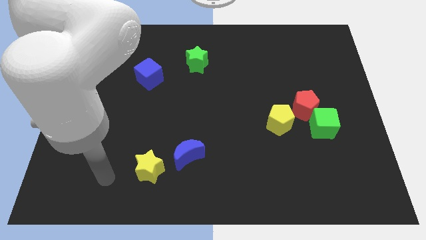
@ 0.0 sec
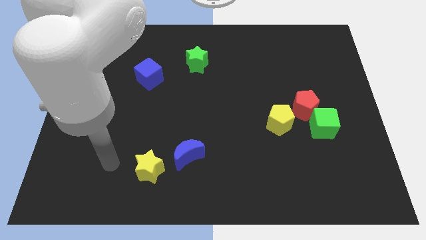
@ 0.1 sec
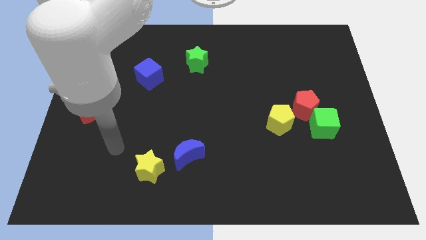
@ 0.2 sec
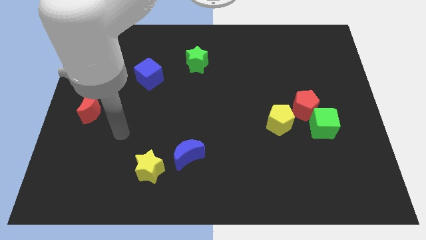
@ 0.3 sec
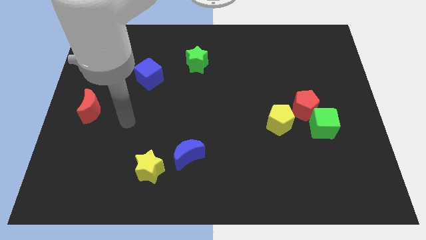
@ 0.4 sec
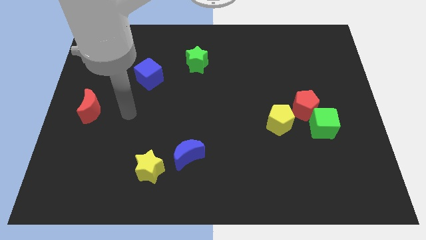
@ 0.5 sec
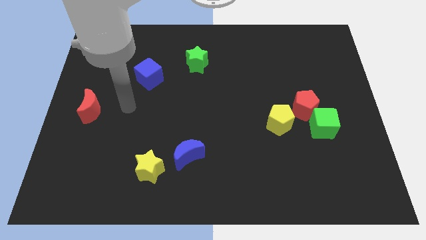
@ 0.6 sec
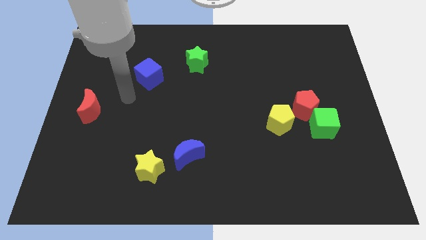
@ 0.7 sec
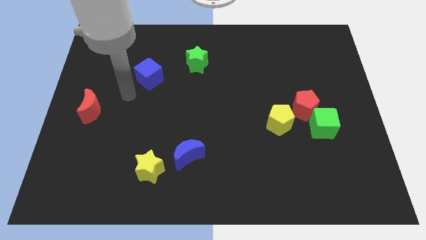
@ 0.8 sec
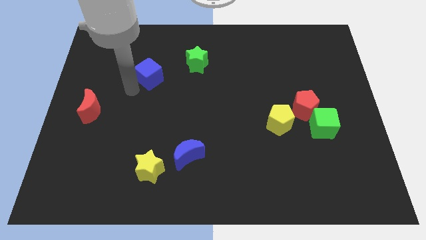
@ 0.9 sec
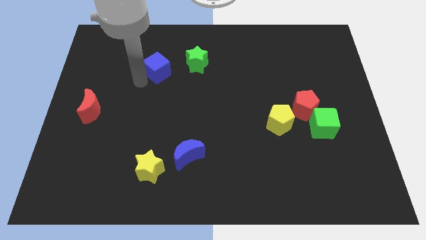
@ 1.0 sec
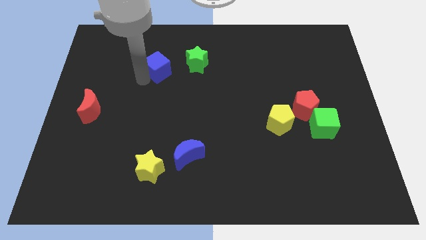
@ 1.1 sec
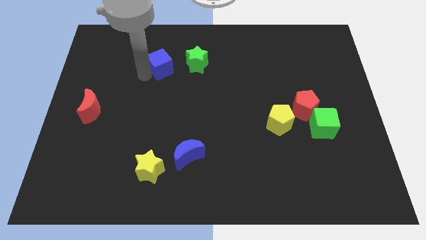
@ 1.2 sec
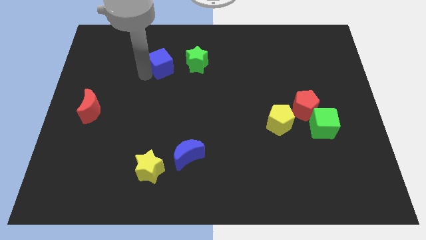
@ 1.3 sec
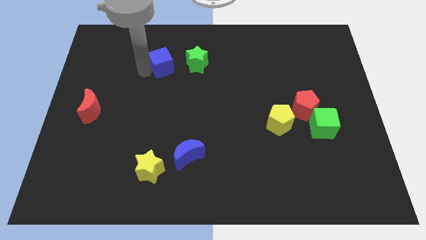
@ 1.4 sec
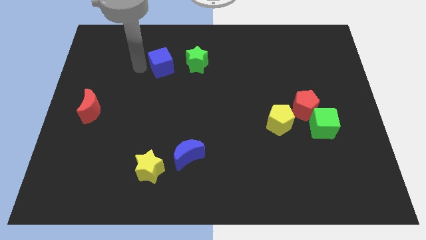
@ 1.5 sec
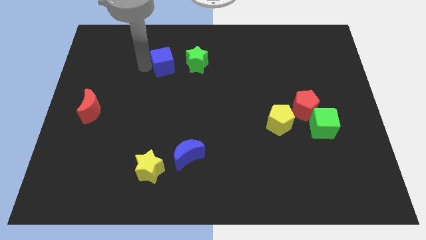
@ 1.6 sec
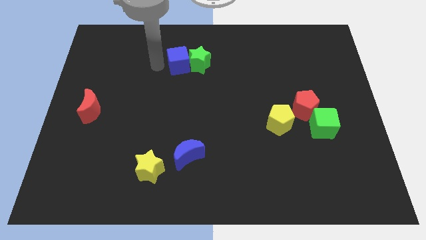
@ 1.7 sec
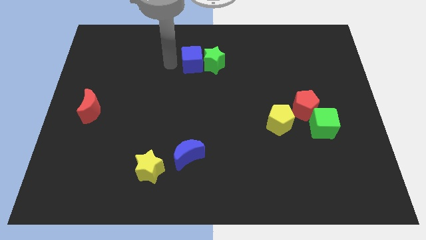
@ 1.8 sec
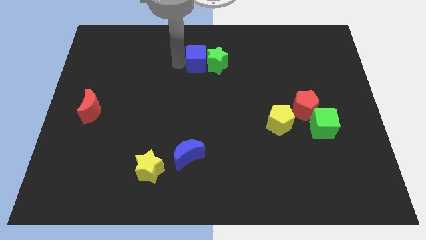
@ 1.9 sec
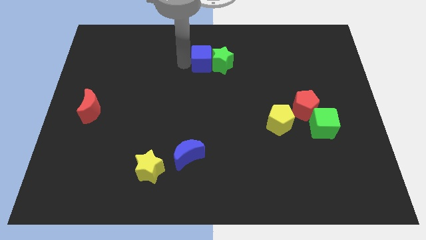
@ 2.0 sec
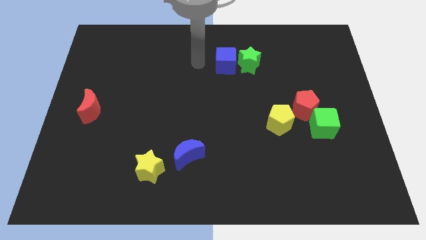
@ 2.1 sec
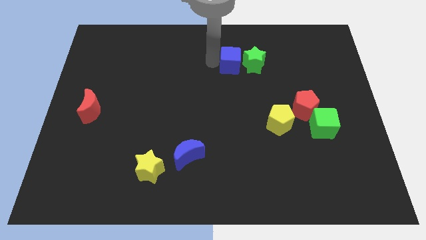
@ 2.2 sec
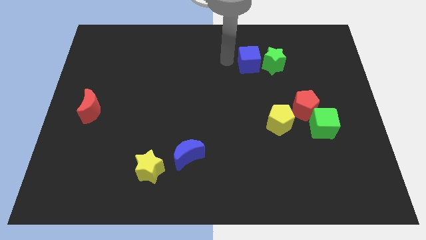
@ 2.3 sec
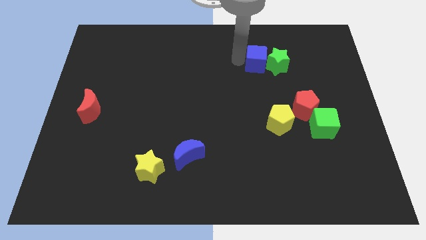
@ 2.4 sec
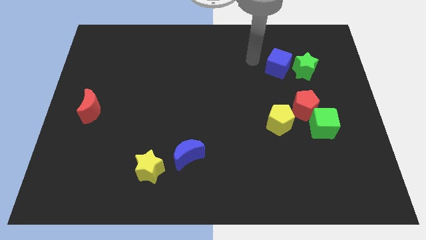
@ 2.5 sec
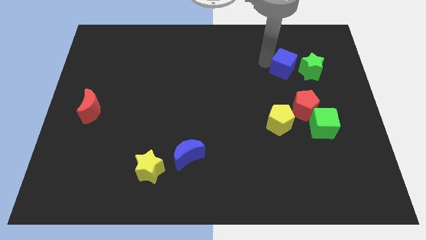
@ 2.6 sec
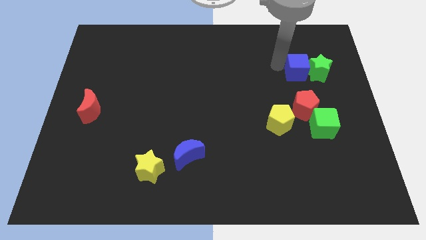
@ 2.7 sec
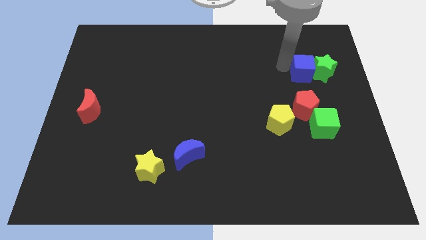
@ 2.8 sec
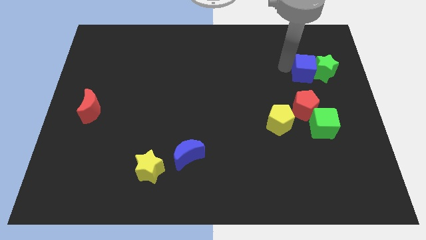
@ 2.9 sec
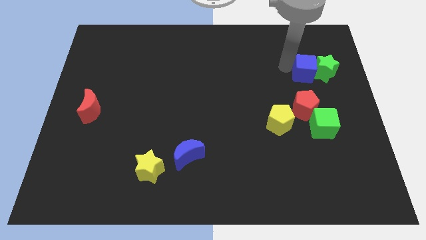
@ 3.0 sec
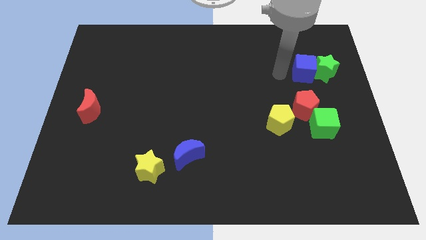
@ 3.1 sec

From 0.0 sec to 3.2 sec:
push the blue cube into the green star

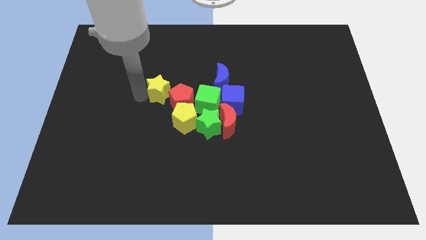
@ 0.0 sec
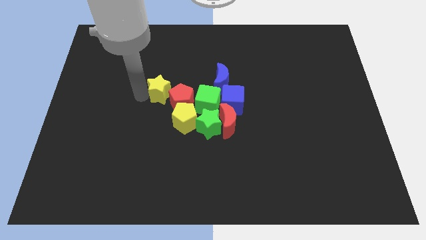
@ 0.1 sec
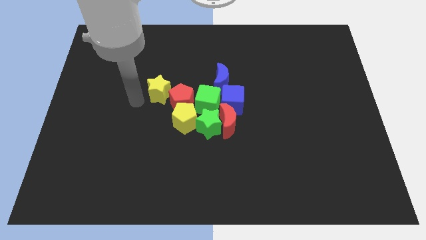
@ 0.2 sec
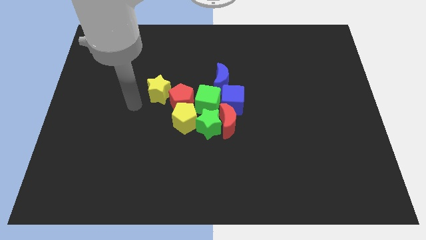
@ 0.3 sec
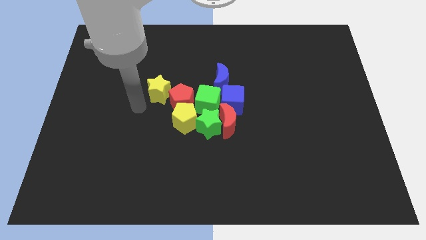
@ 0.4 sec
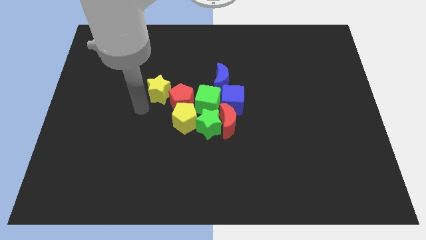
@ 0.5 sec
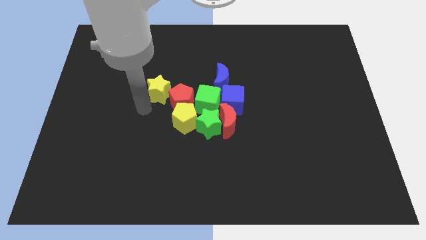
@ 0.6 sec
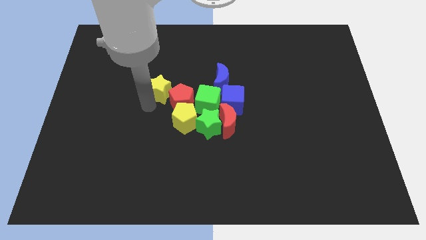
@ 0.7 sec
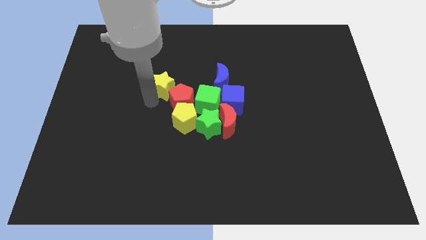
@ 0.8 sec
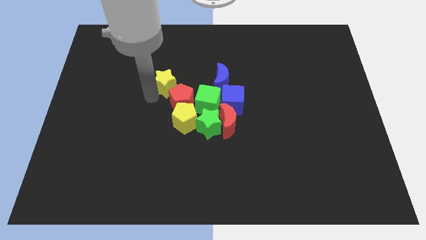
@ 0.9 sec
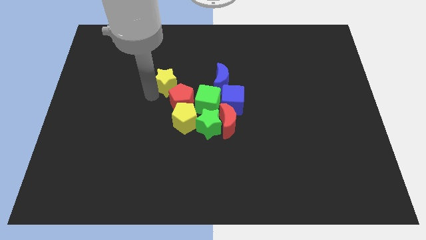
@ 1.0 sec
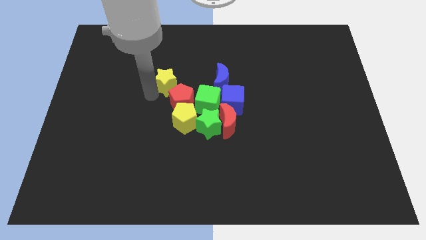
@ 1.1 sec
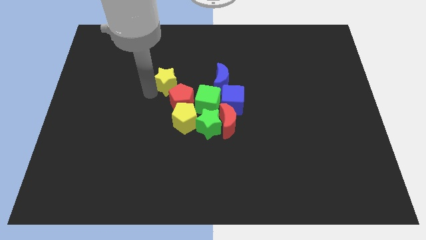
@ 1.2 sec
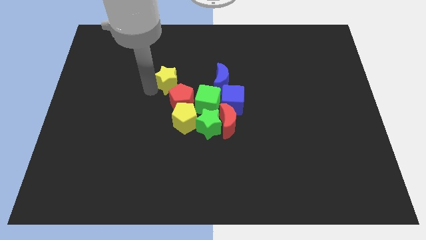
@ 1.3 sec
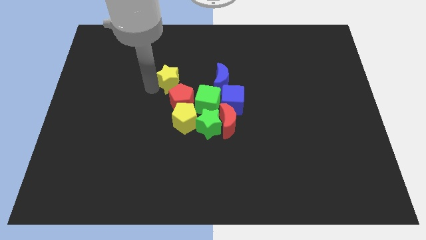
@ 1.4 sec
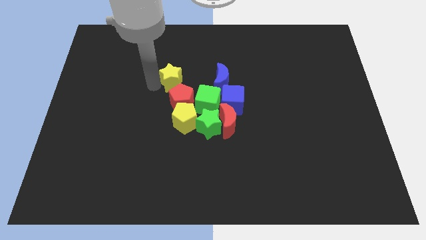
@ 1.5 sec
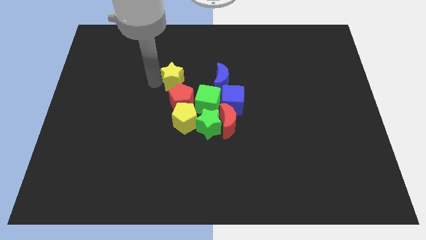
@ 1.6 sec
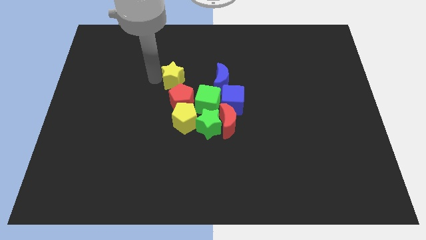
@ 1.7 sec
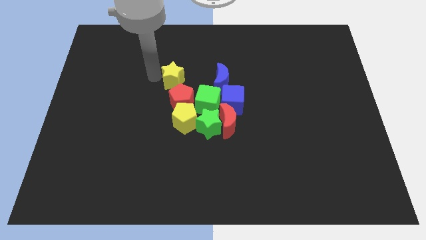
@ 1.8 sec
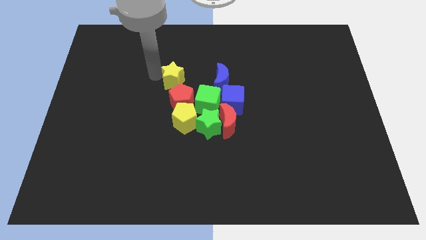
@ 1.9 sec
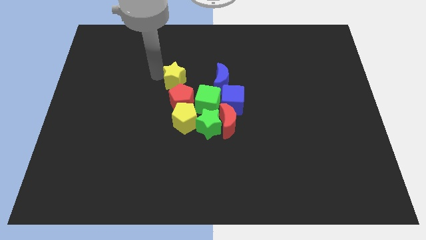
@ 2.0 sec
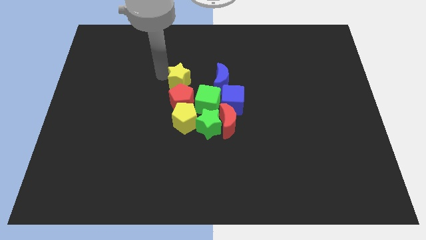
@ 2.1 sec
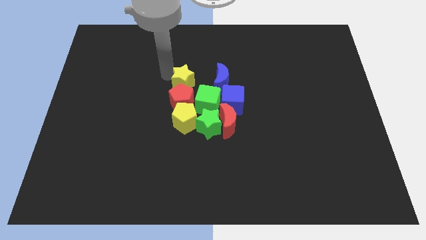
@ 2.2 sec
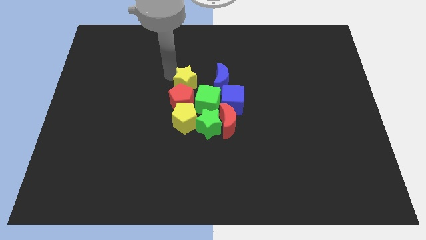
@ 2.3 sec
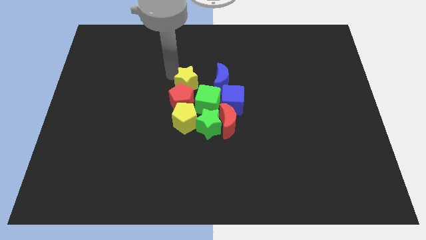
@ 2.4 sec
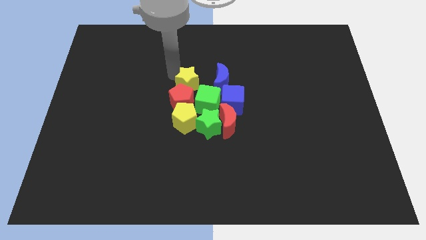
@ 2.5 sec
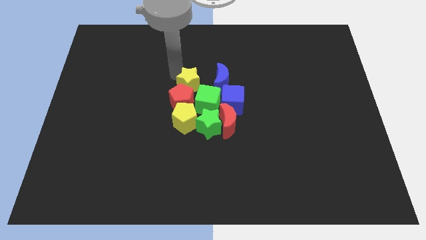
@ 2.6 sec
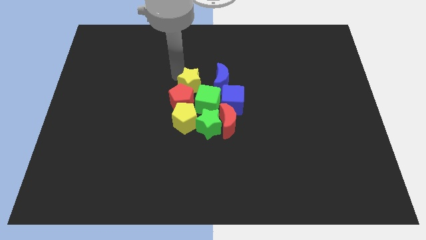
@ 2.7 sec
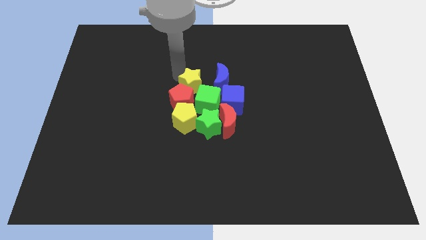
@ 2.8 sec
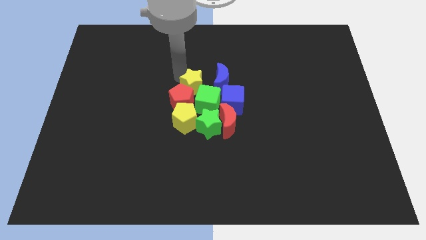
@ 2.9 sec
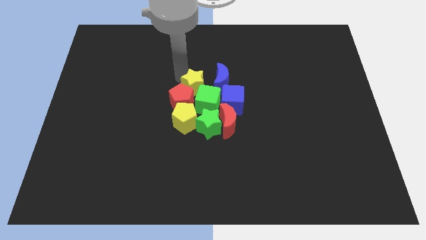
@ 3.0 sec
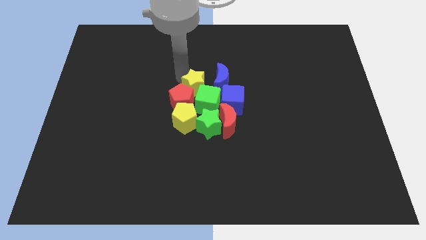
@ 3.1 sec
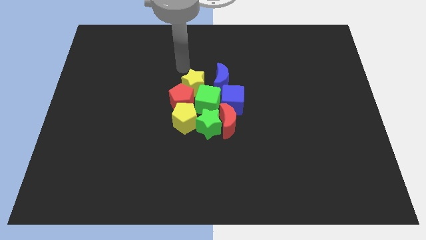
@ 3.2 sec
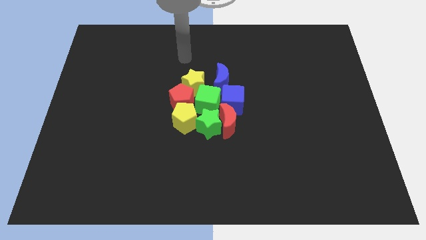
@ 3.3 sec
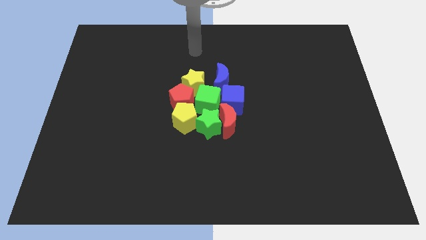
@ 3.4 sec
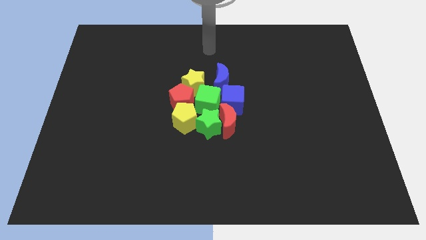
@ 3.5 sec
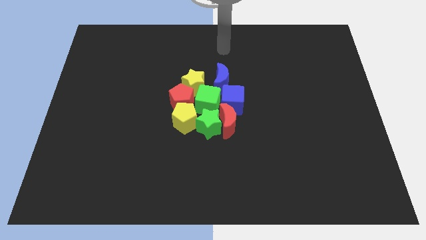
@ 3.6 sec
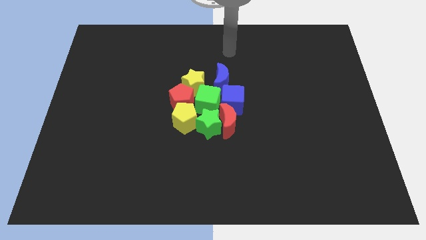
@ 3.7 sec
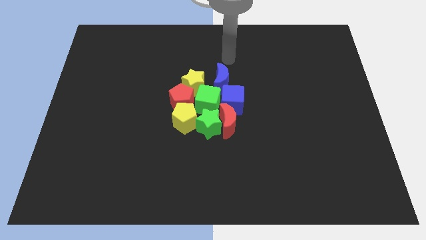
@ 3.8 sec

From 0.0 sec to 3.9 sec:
place the yellow star above the red pentagon

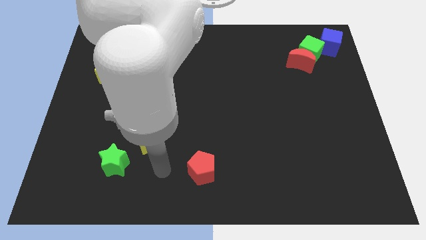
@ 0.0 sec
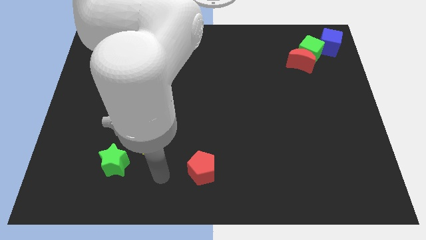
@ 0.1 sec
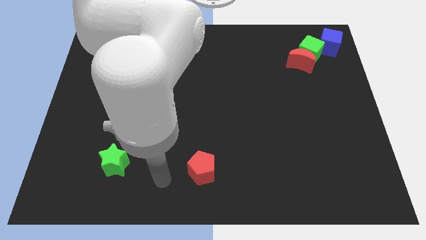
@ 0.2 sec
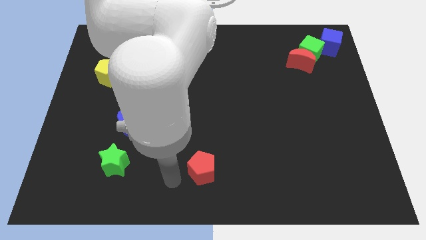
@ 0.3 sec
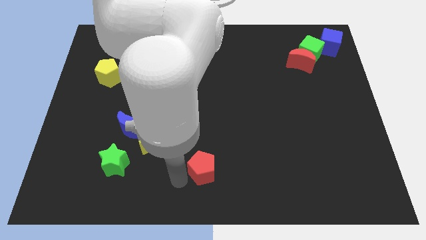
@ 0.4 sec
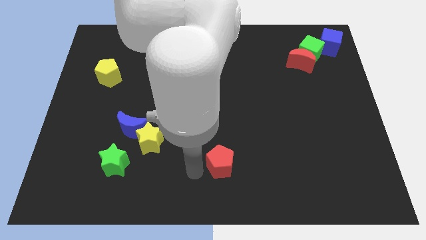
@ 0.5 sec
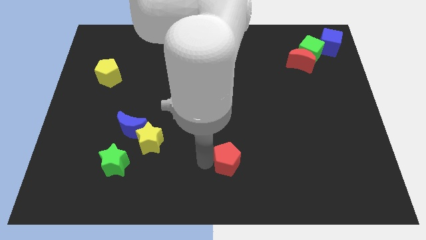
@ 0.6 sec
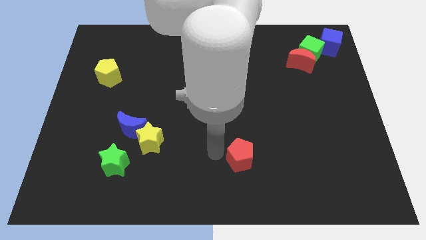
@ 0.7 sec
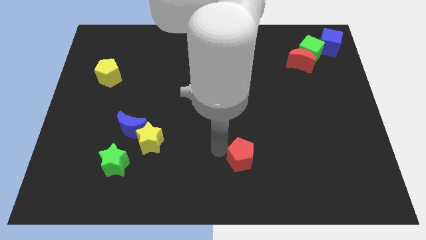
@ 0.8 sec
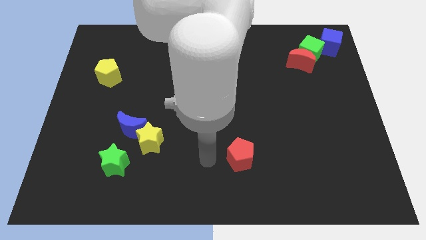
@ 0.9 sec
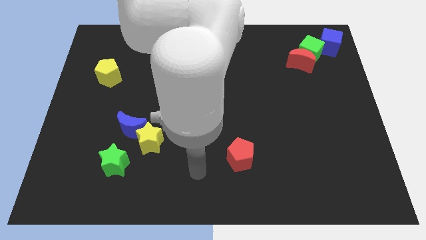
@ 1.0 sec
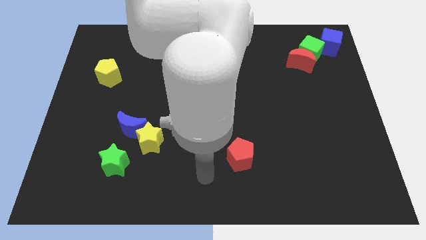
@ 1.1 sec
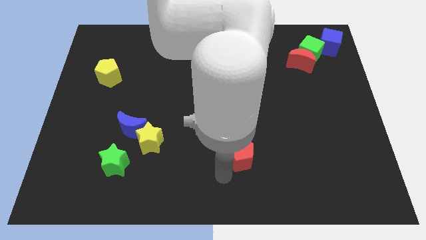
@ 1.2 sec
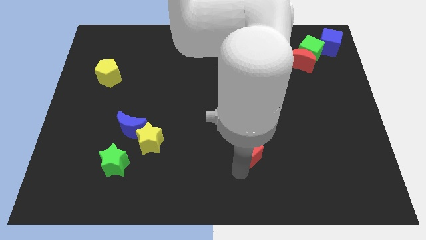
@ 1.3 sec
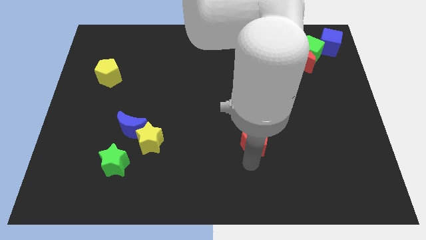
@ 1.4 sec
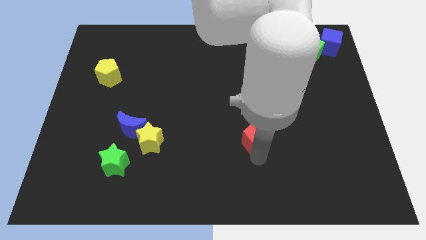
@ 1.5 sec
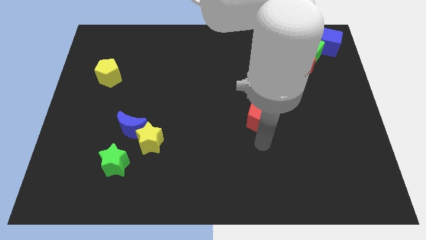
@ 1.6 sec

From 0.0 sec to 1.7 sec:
move the red pentagon towards the top right side of the board

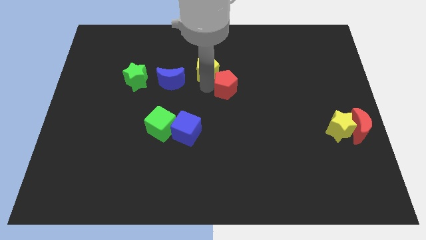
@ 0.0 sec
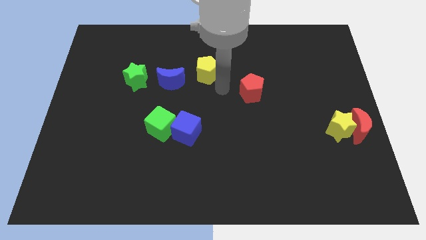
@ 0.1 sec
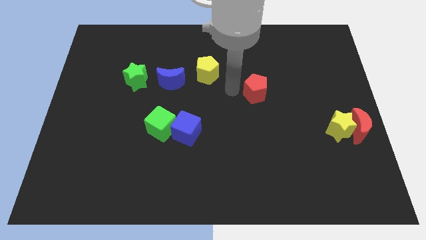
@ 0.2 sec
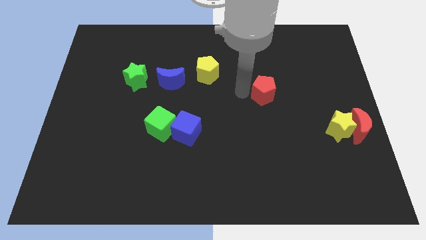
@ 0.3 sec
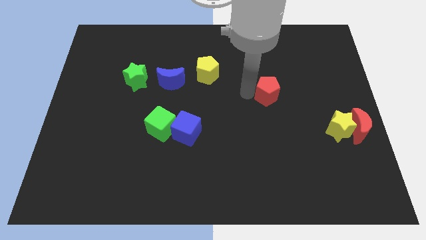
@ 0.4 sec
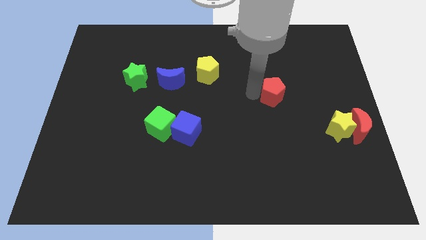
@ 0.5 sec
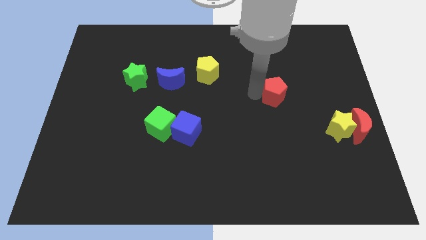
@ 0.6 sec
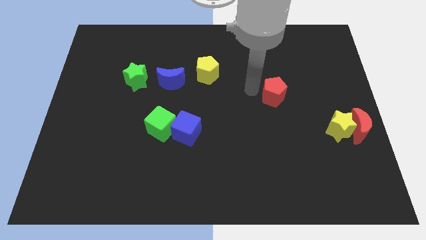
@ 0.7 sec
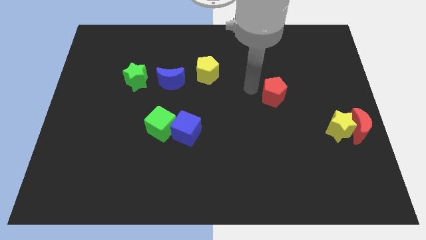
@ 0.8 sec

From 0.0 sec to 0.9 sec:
separate the pentagons
